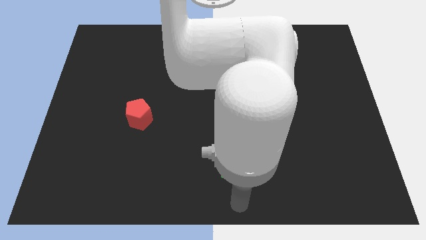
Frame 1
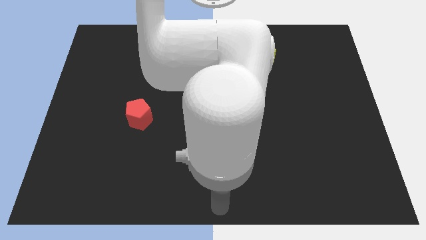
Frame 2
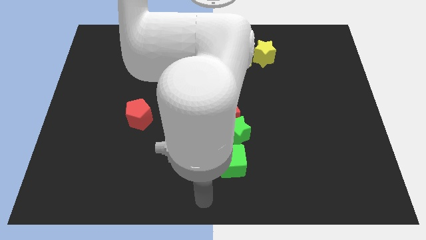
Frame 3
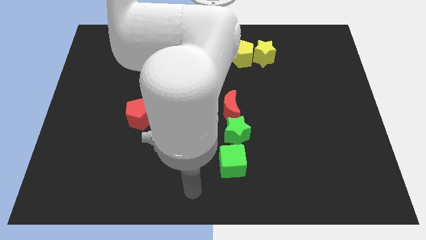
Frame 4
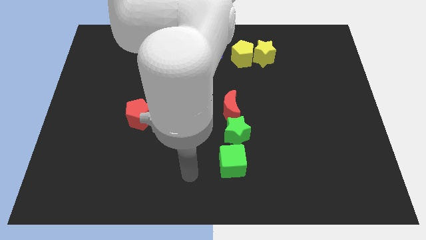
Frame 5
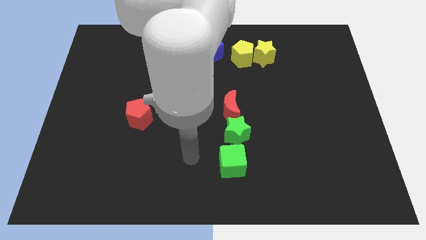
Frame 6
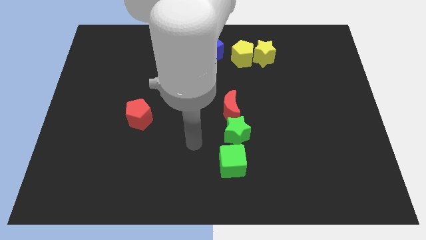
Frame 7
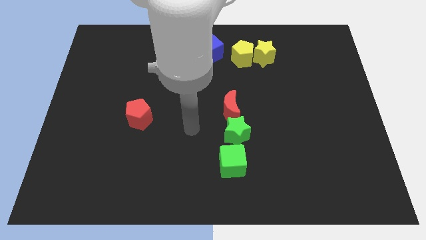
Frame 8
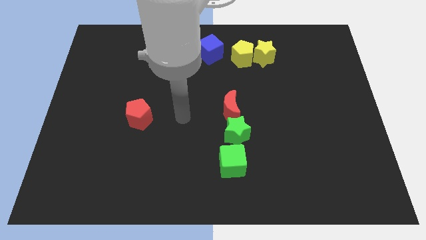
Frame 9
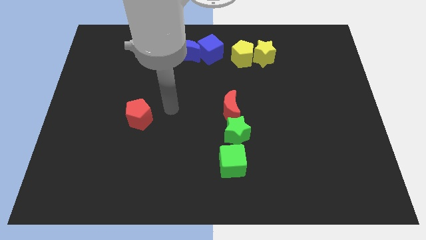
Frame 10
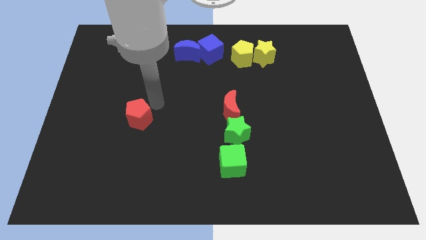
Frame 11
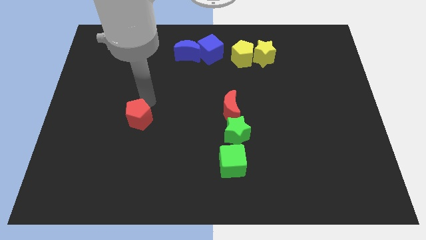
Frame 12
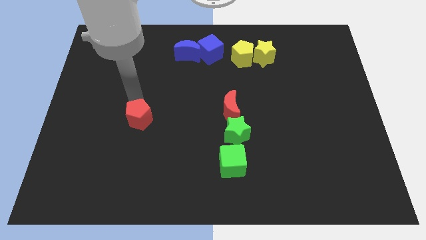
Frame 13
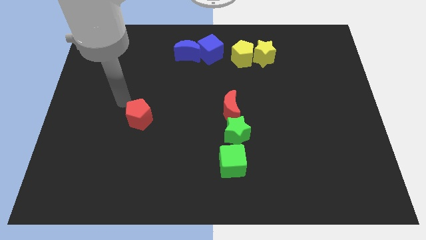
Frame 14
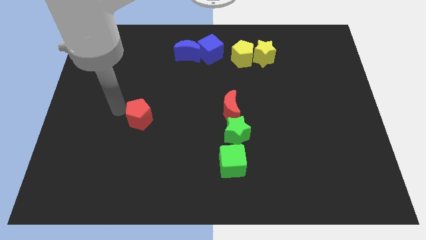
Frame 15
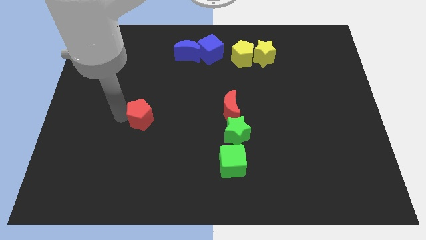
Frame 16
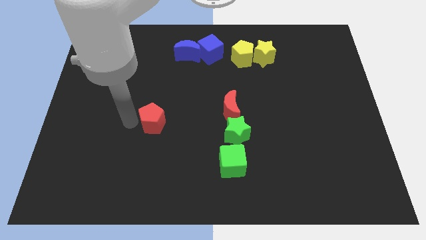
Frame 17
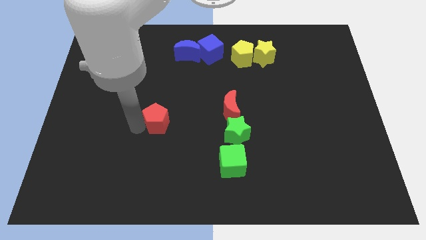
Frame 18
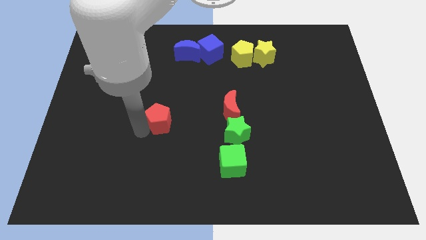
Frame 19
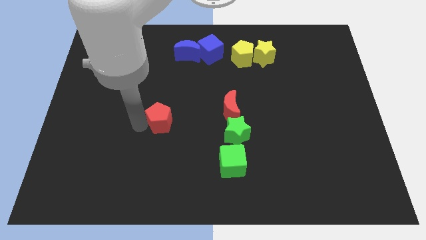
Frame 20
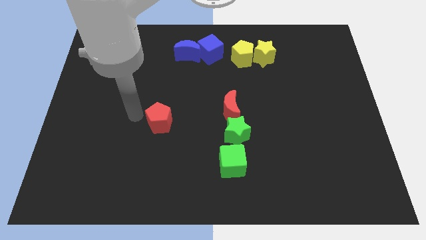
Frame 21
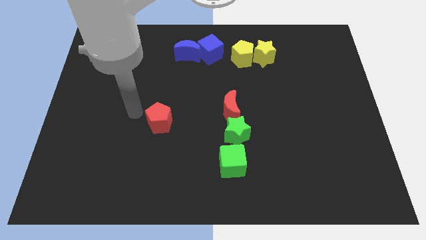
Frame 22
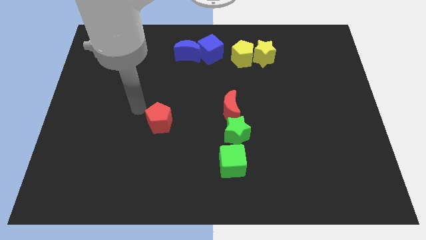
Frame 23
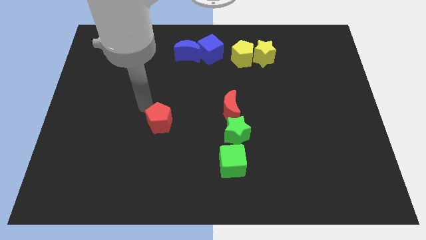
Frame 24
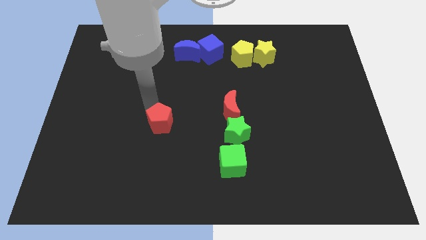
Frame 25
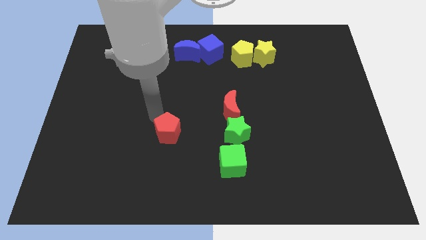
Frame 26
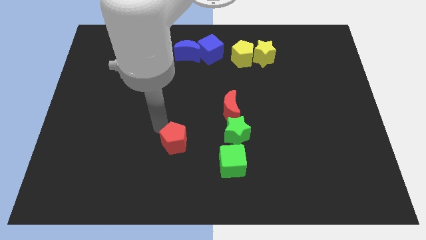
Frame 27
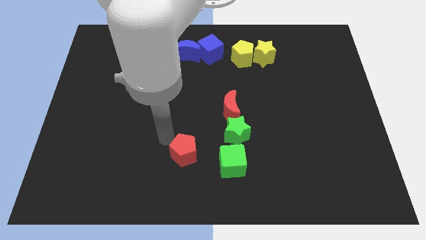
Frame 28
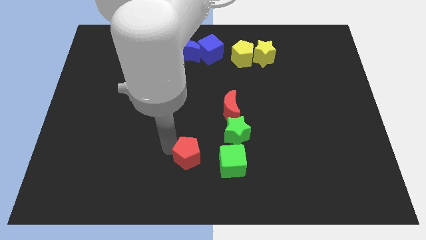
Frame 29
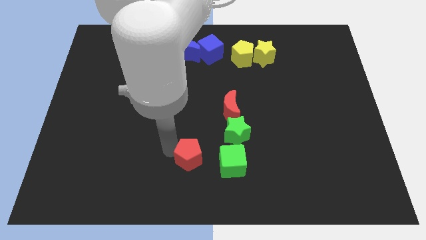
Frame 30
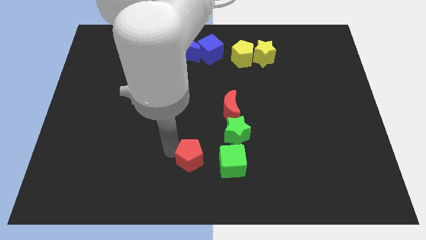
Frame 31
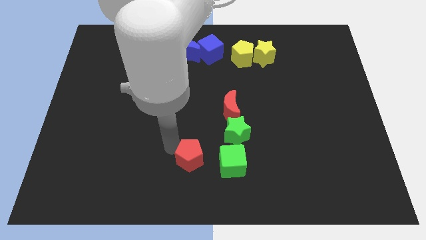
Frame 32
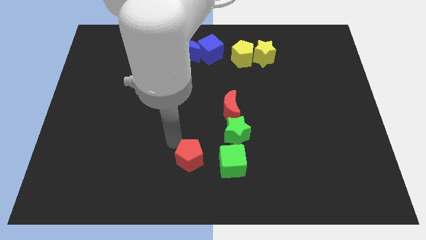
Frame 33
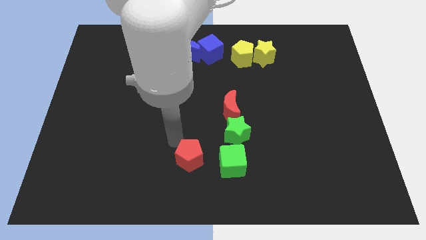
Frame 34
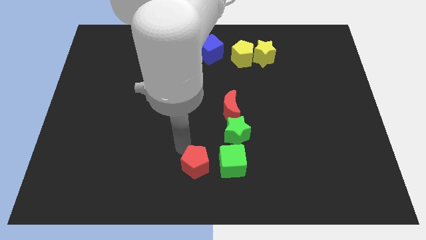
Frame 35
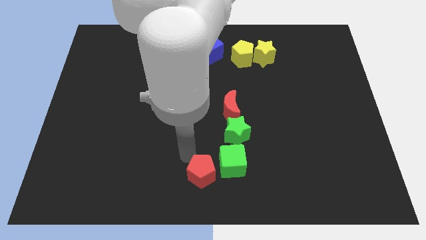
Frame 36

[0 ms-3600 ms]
place the red pentagon to the left of the green cube

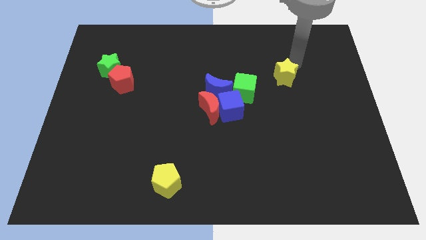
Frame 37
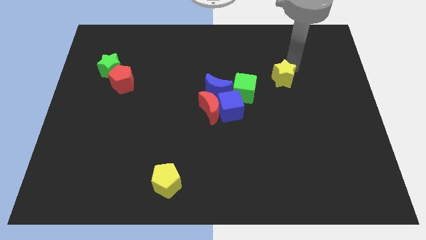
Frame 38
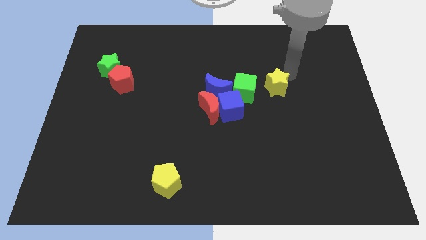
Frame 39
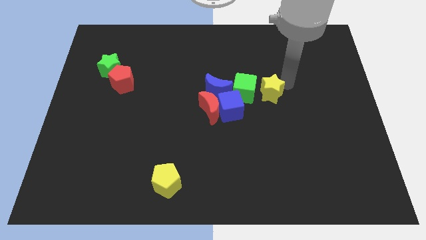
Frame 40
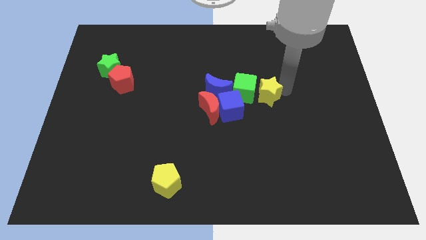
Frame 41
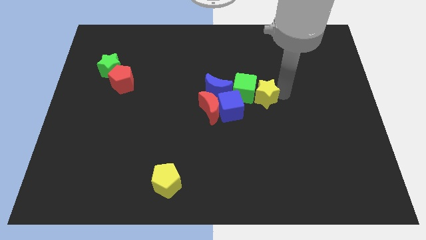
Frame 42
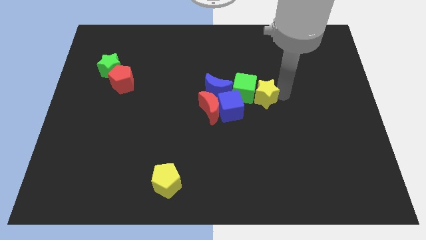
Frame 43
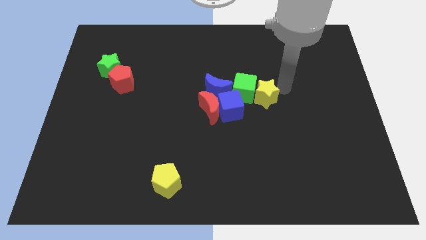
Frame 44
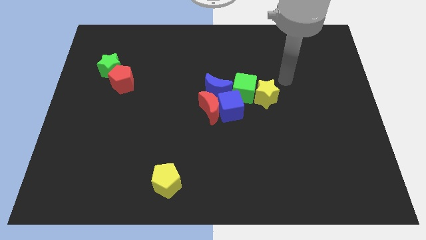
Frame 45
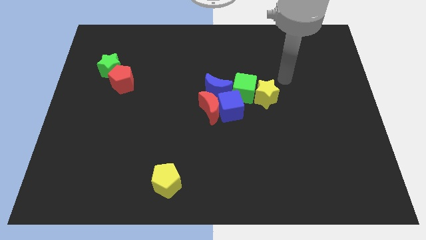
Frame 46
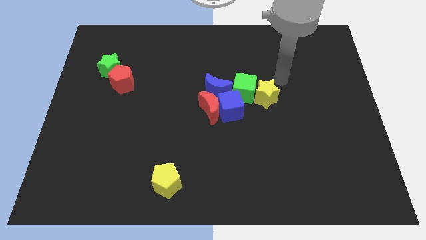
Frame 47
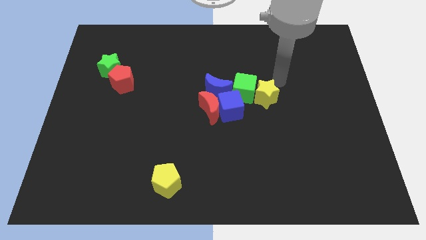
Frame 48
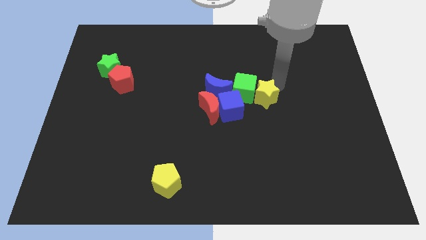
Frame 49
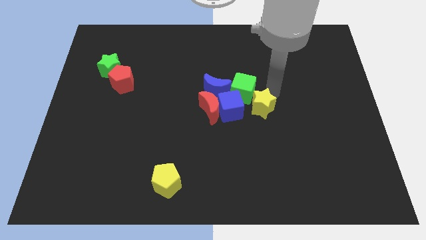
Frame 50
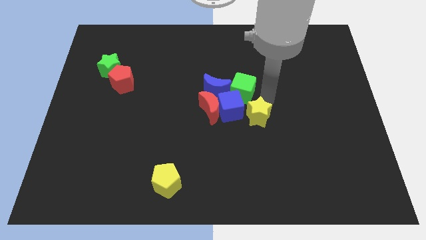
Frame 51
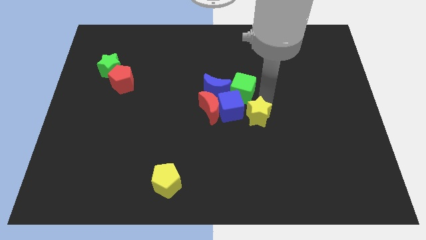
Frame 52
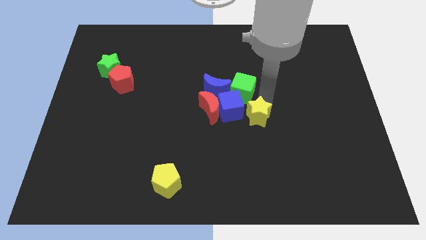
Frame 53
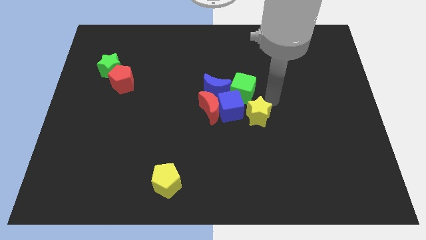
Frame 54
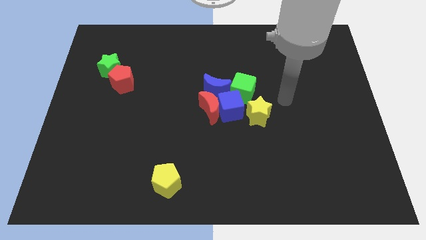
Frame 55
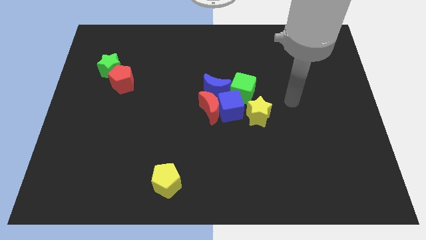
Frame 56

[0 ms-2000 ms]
slightly touch the bottom of the green cube with yellow star

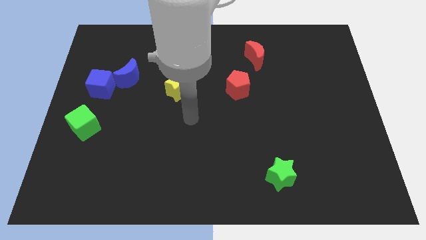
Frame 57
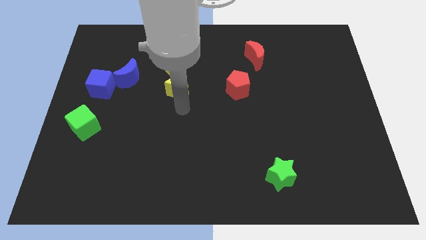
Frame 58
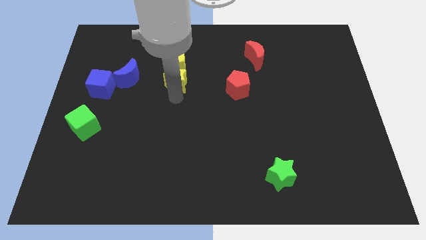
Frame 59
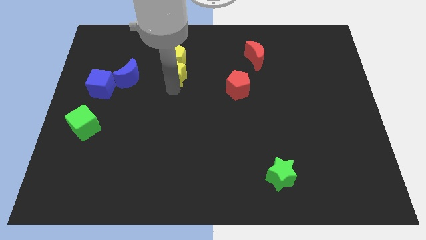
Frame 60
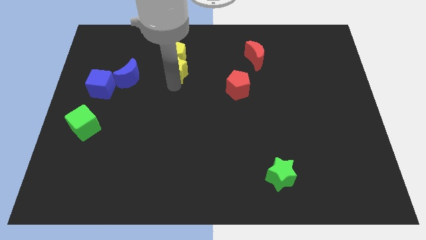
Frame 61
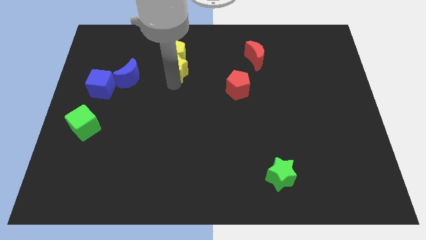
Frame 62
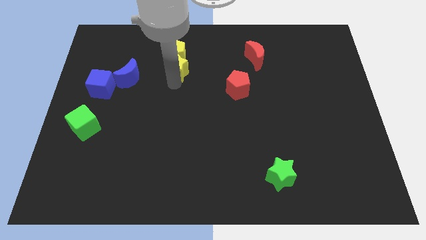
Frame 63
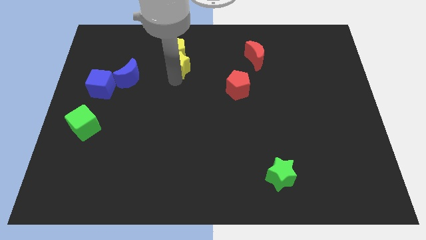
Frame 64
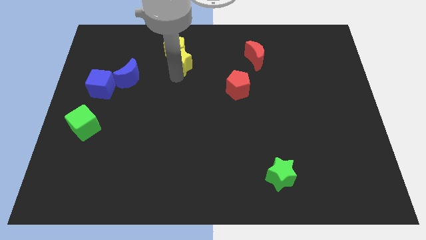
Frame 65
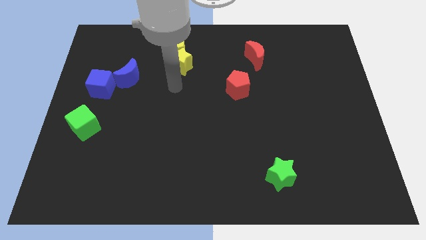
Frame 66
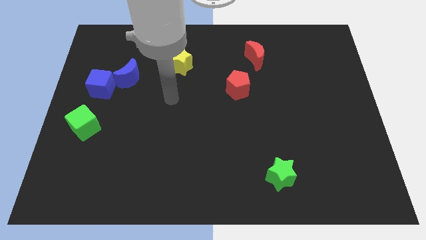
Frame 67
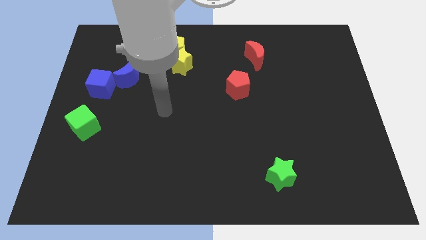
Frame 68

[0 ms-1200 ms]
move the yellow star into the yellow pentagon

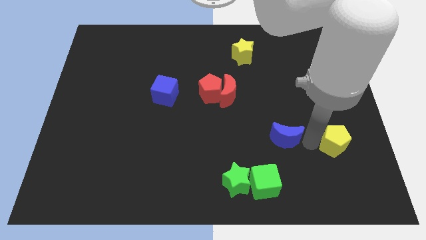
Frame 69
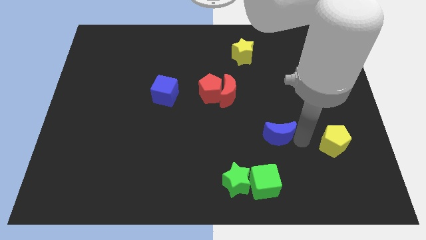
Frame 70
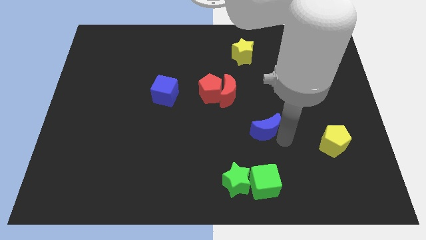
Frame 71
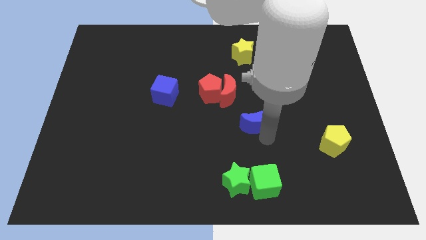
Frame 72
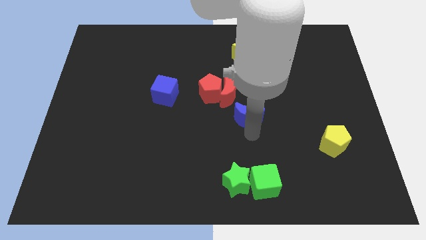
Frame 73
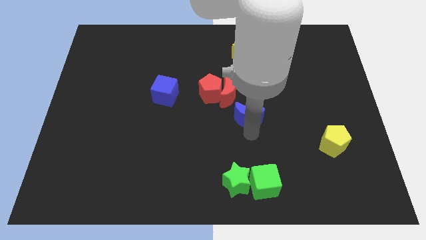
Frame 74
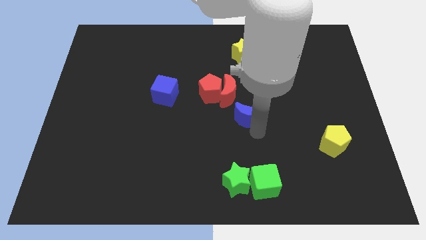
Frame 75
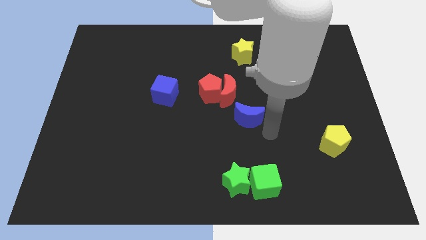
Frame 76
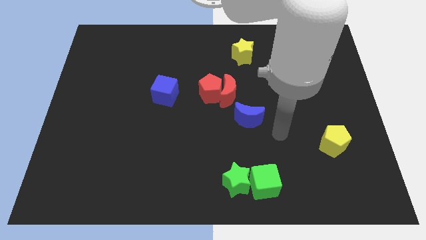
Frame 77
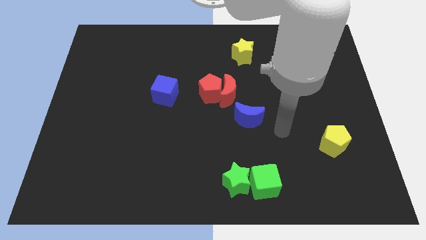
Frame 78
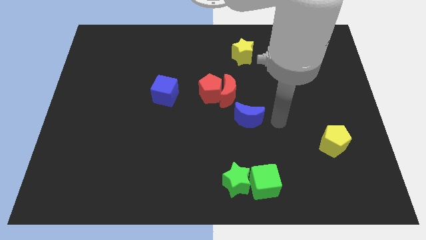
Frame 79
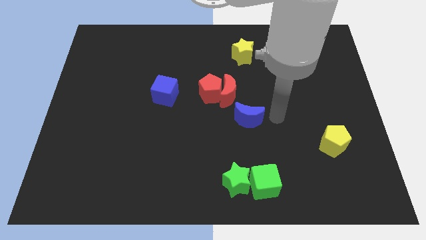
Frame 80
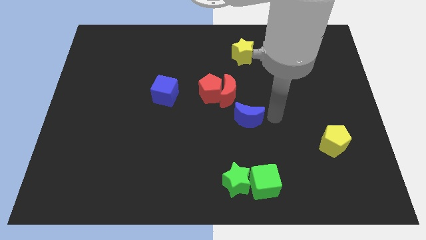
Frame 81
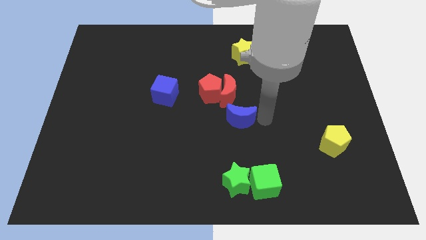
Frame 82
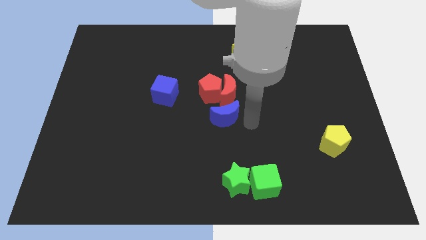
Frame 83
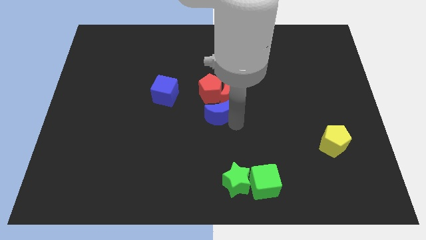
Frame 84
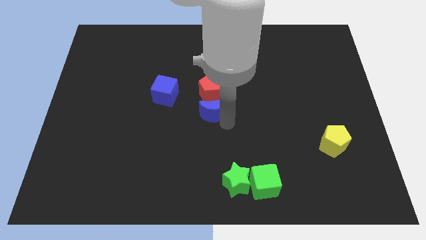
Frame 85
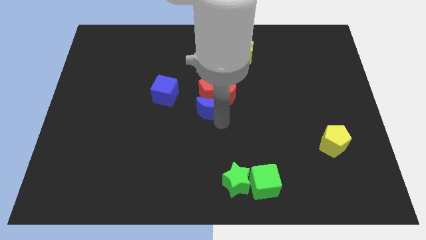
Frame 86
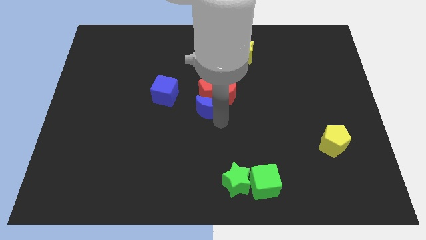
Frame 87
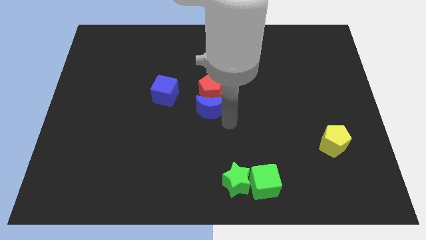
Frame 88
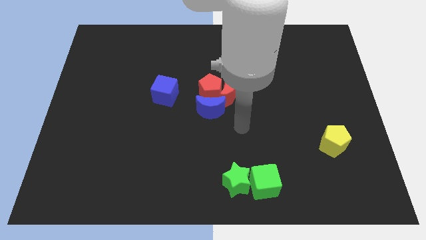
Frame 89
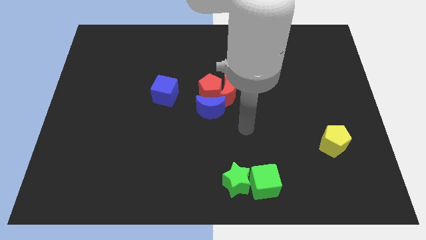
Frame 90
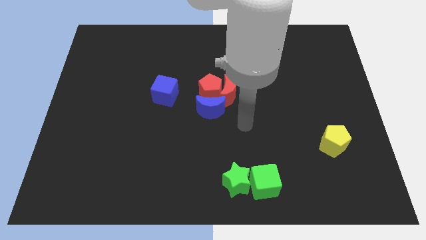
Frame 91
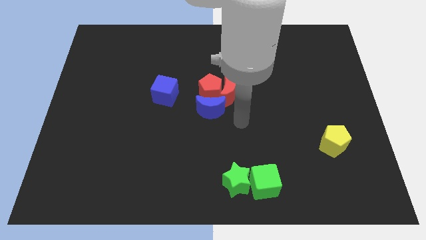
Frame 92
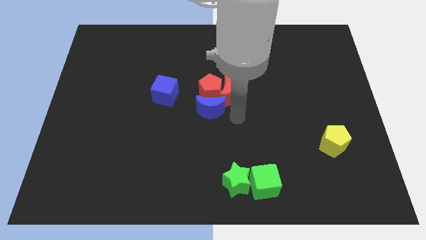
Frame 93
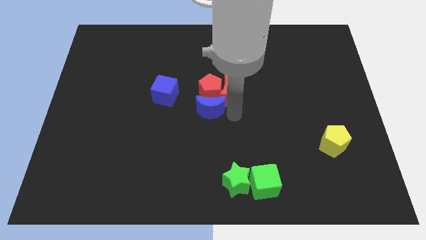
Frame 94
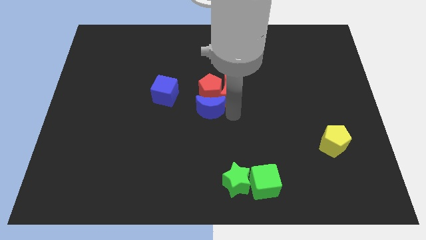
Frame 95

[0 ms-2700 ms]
place the blue moon below the red blocks
